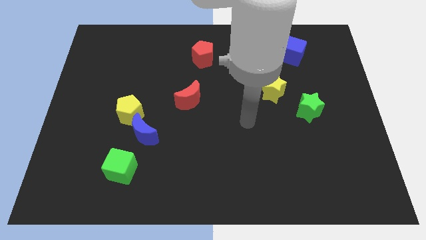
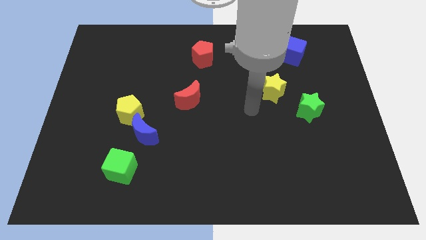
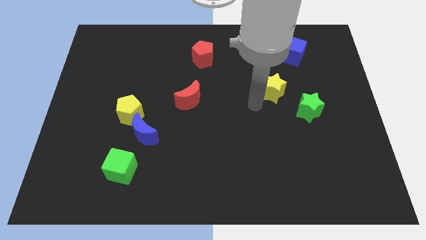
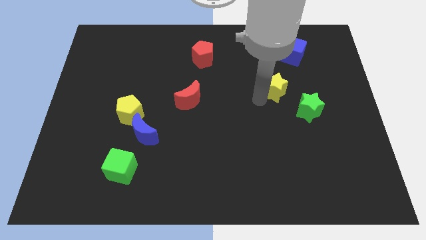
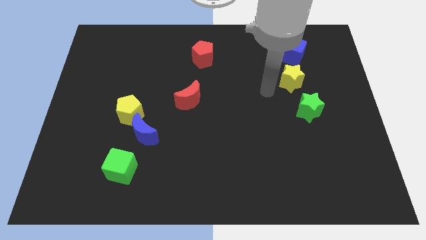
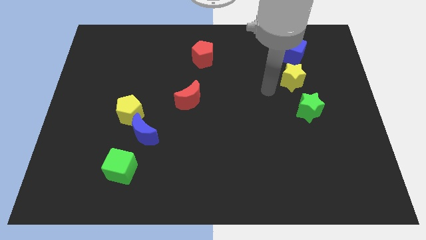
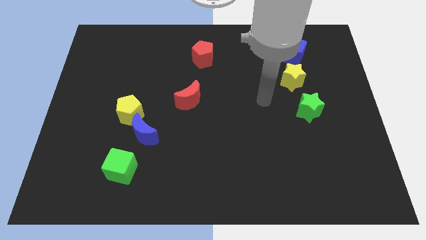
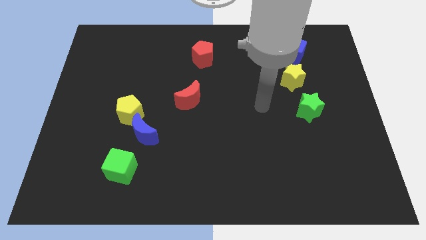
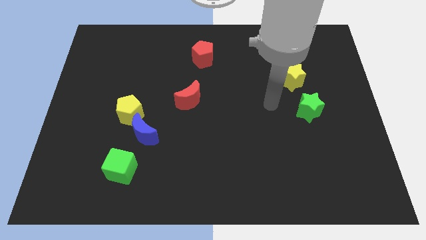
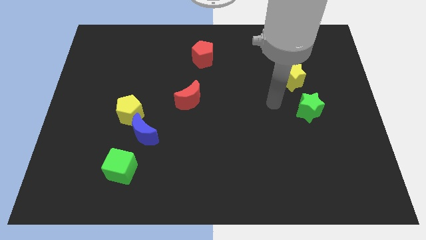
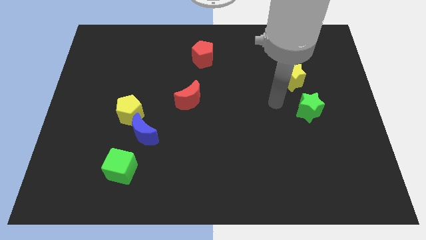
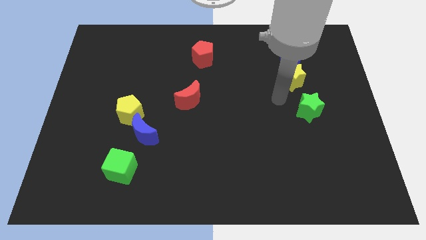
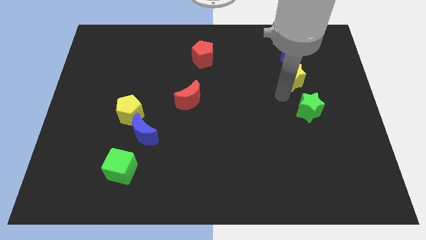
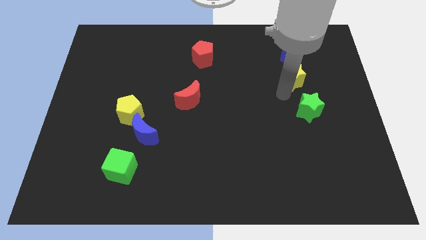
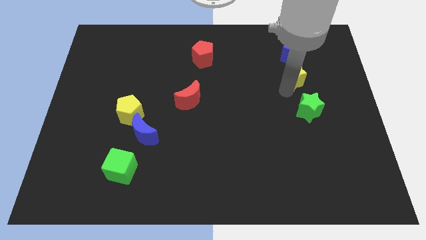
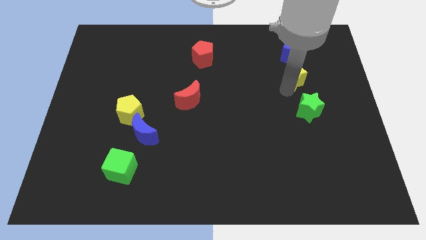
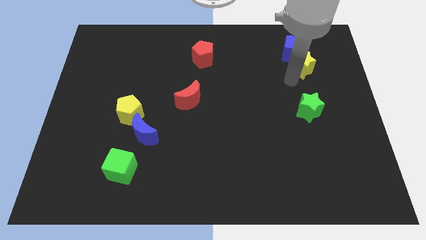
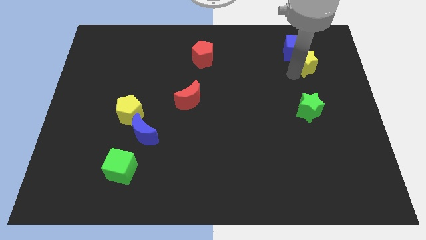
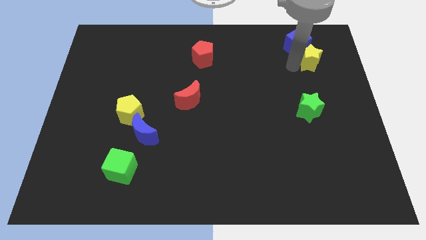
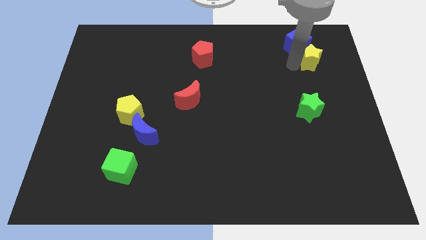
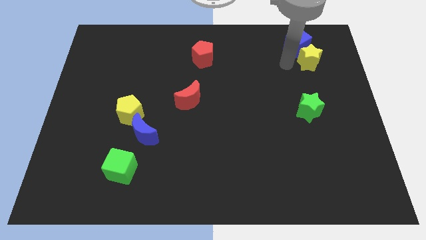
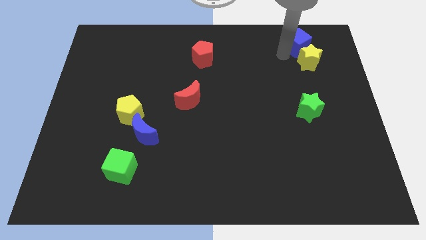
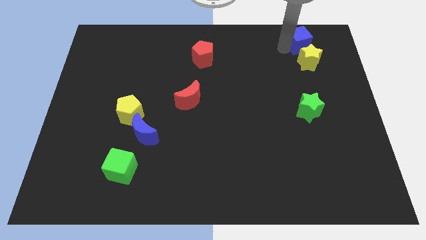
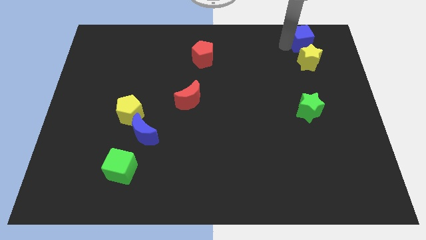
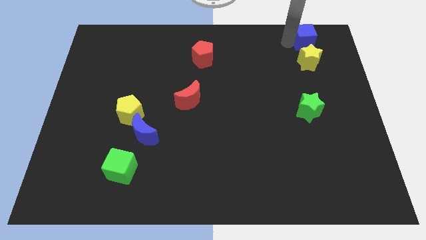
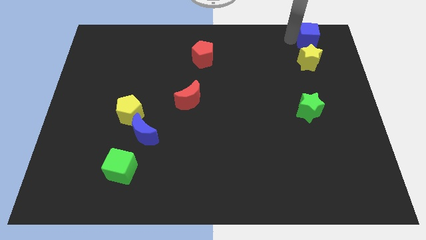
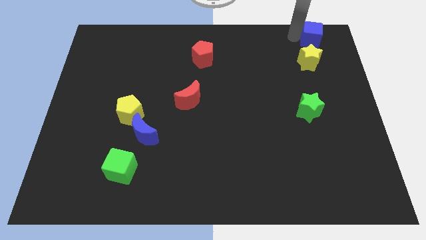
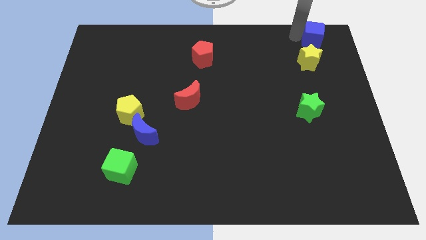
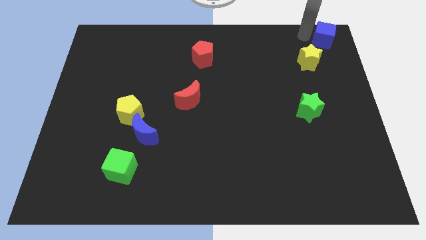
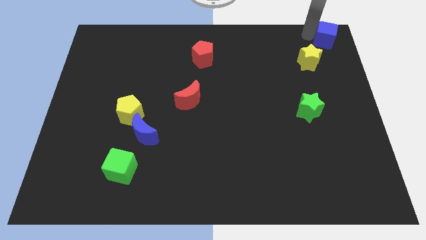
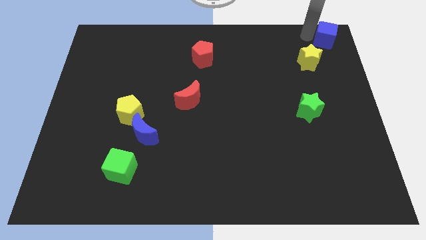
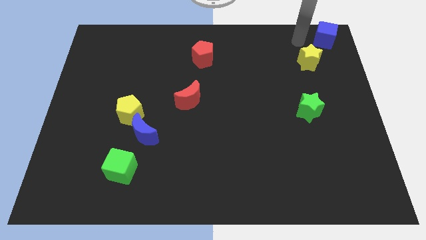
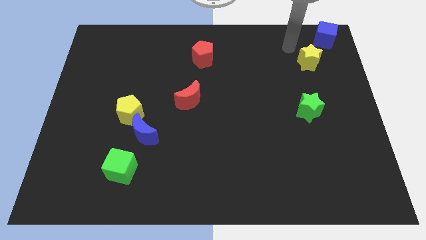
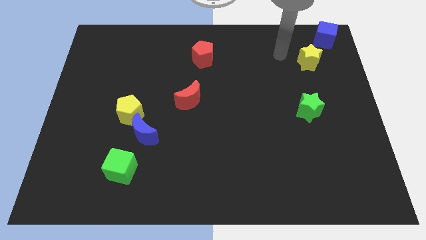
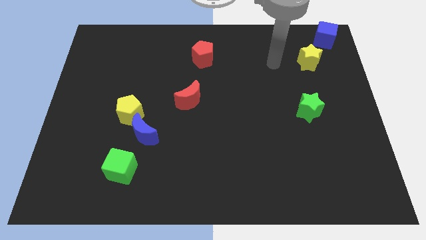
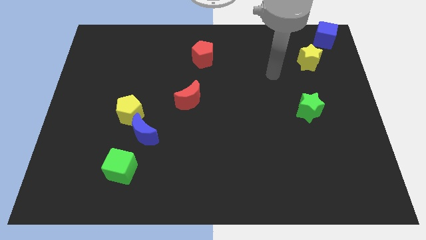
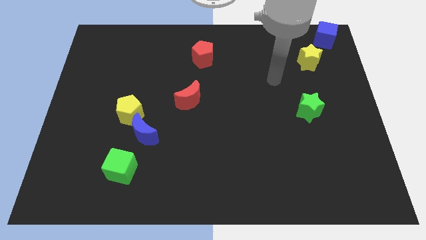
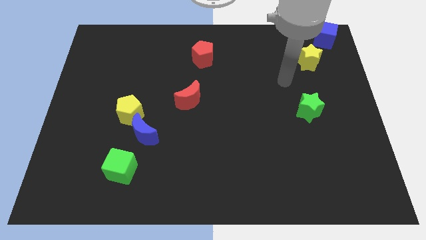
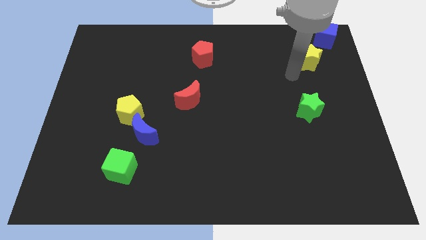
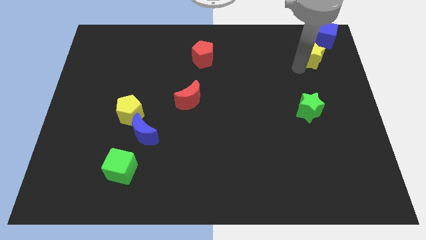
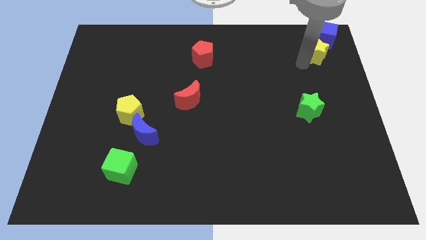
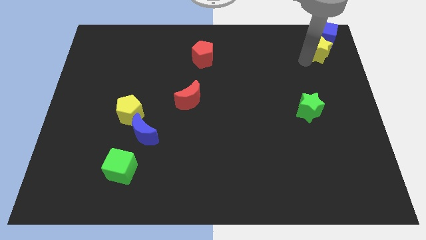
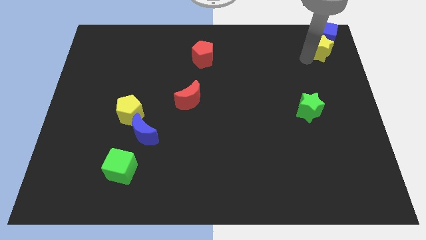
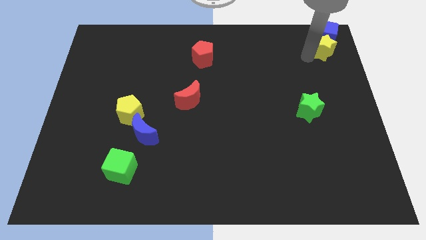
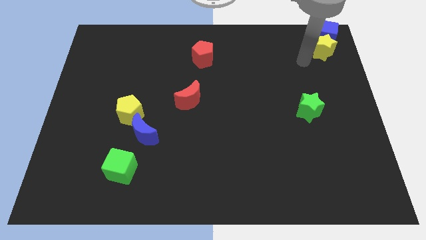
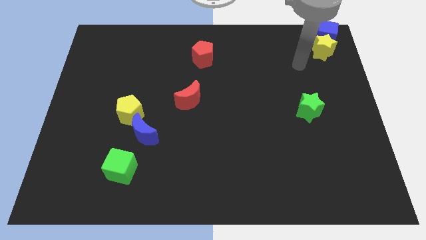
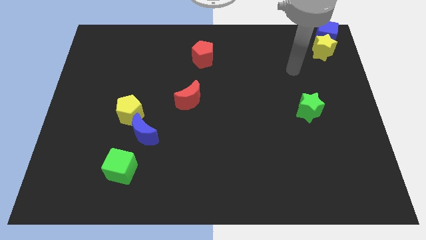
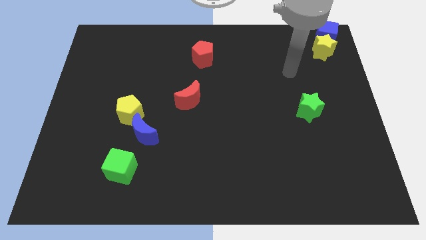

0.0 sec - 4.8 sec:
push the blue cube and yellow star to the top right corner of the board

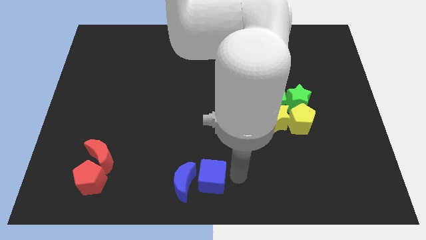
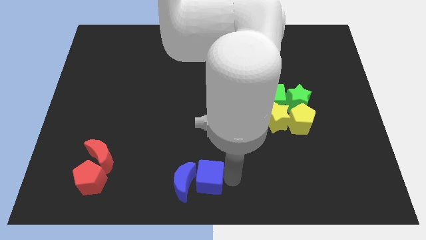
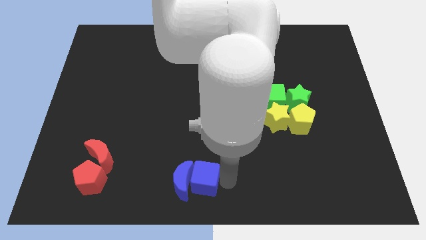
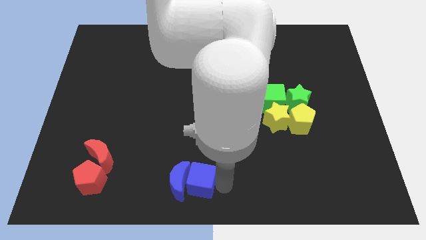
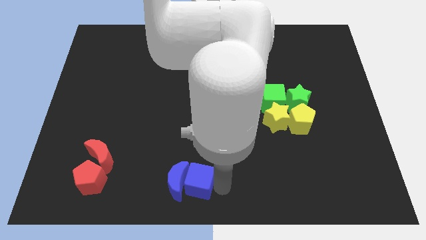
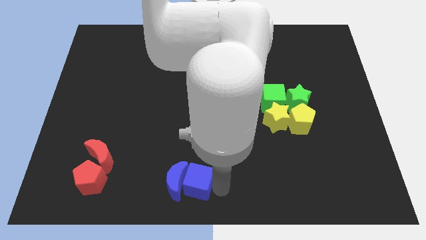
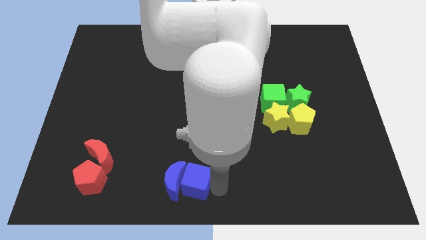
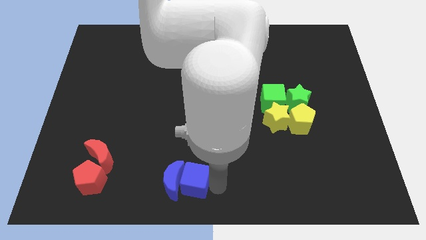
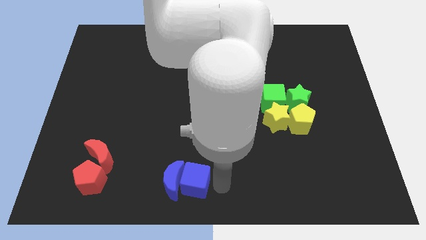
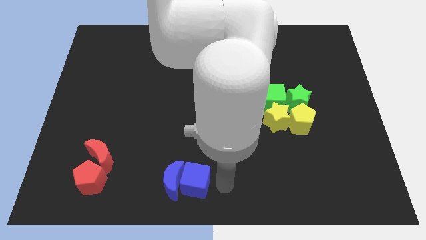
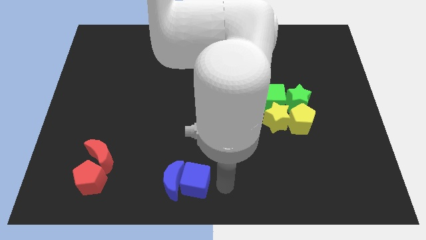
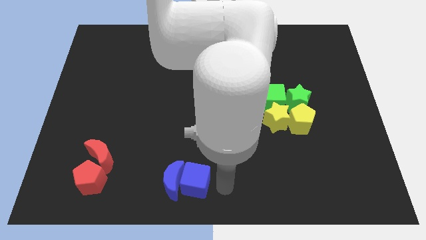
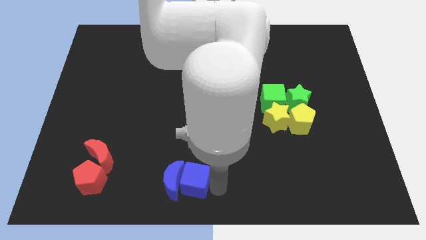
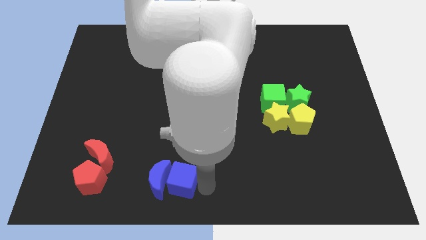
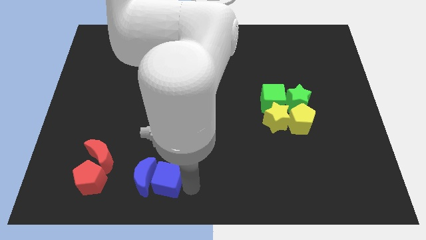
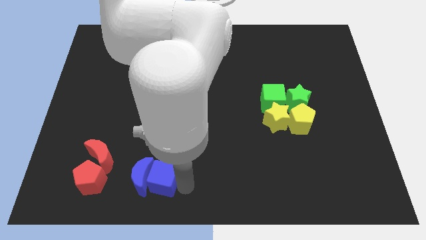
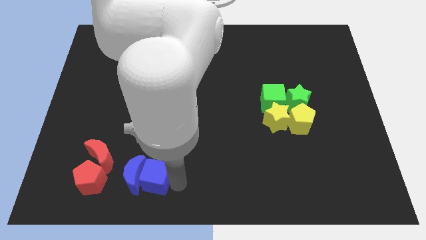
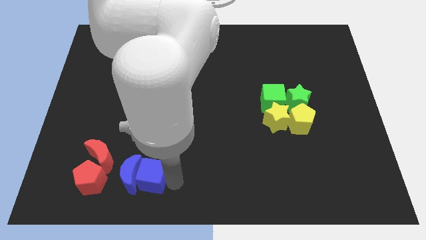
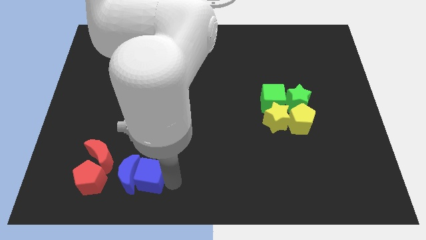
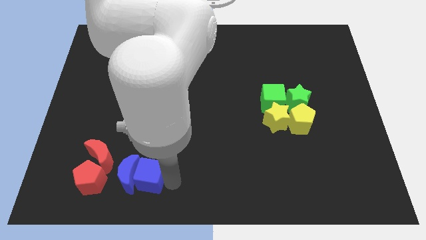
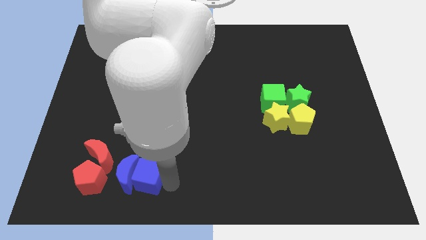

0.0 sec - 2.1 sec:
move blue objects near to the red objects

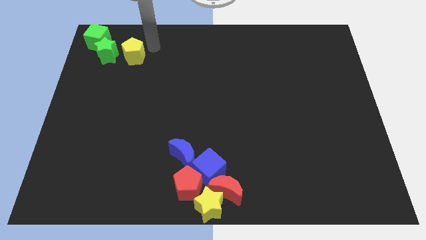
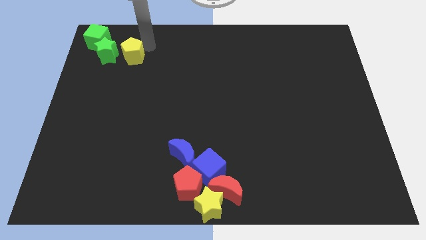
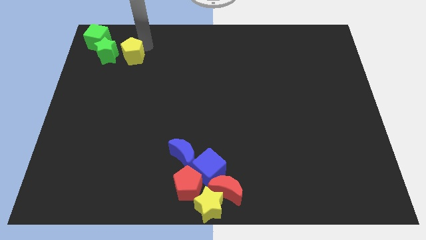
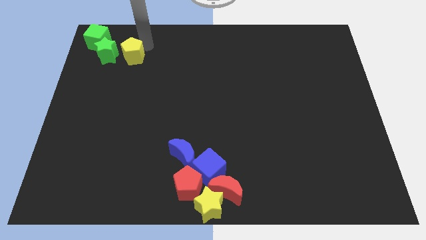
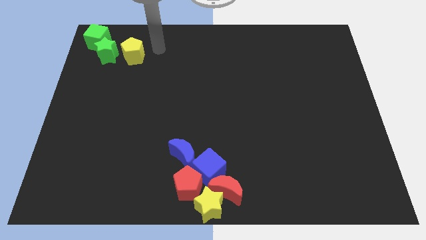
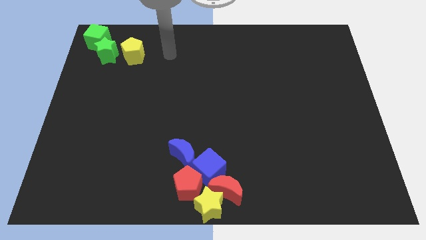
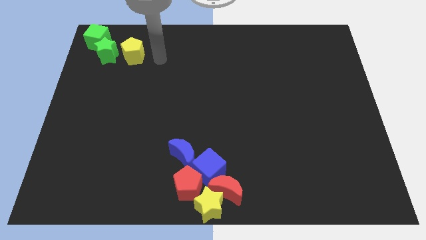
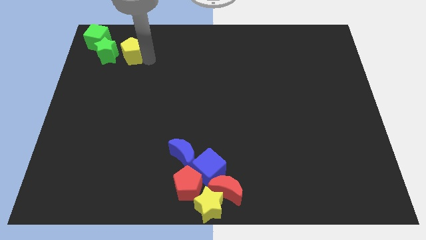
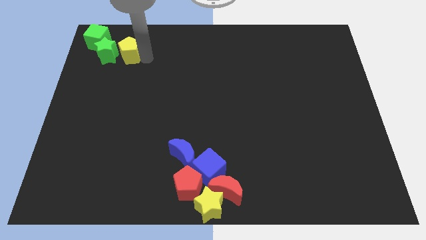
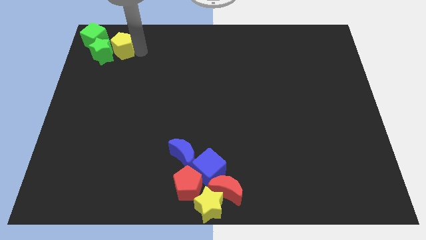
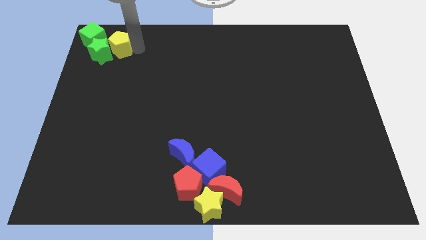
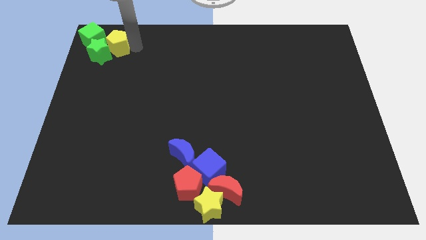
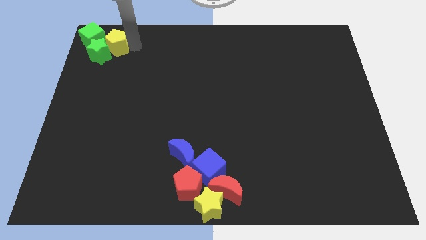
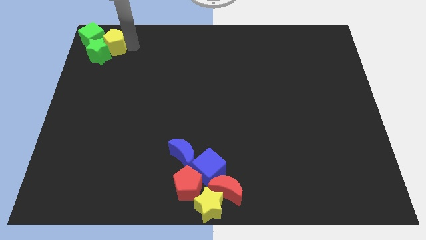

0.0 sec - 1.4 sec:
push the yellow pentagon into the green star

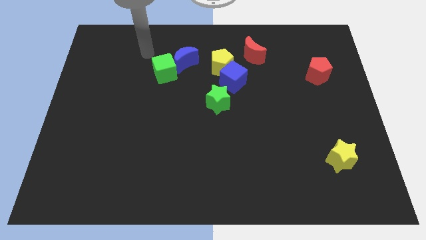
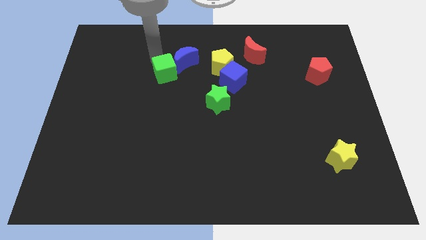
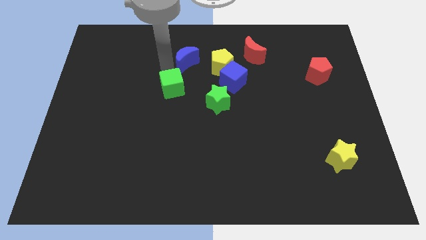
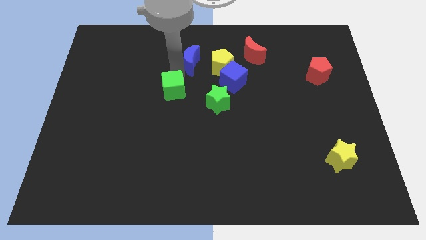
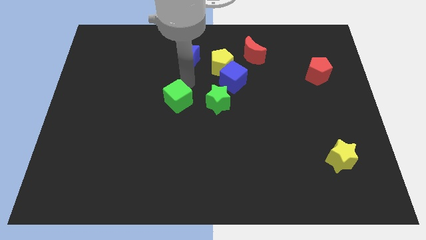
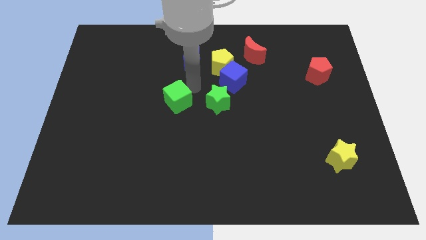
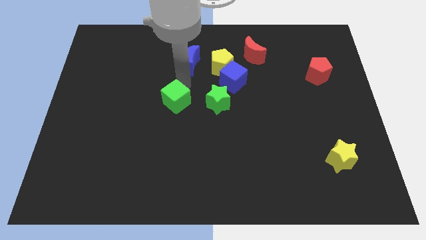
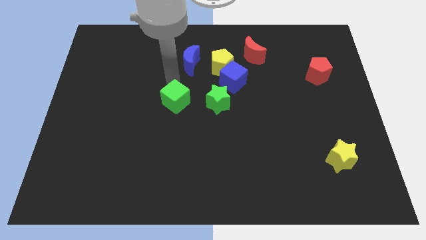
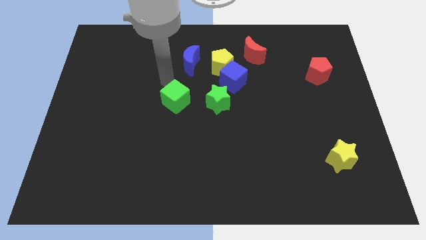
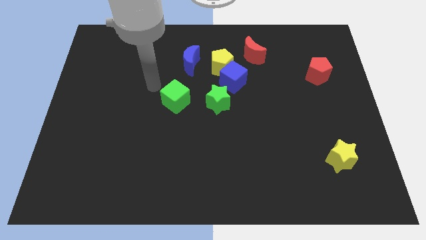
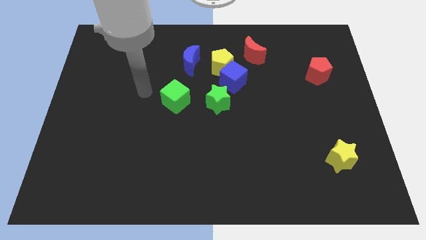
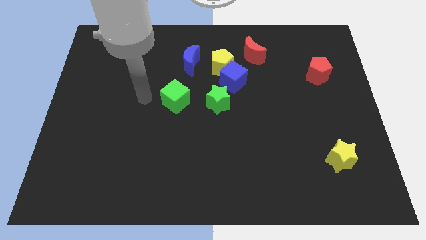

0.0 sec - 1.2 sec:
place the green cube to the left side of the green star
